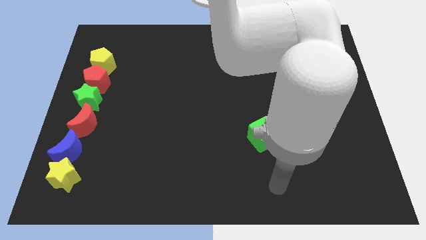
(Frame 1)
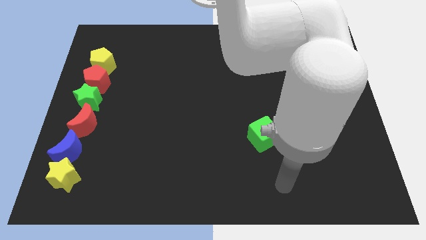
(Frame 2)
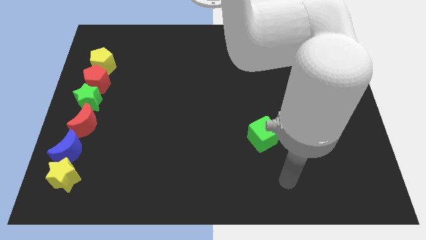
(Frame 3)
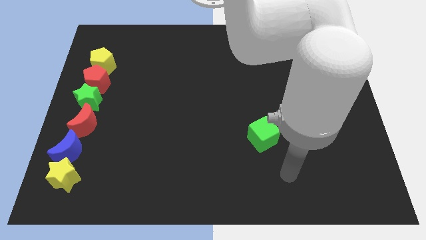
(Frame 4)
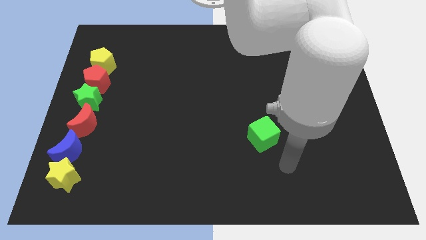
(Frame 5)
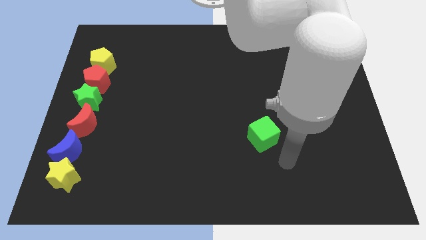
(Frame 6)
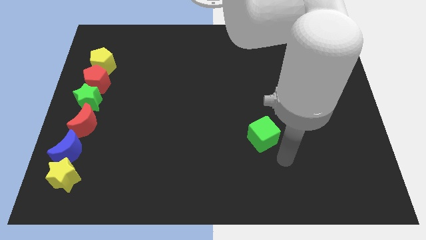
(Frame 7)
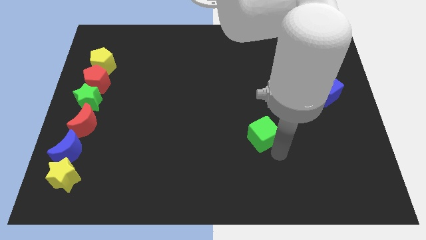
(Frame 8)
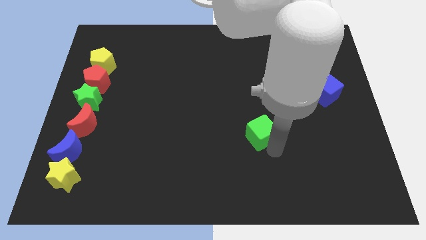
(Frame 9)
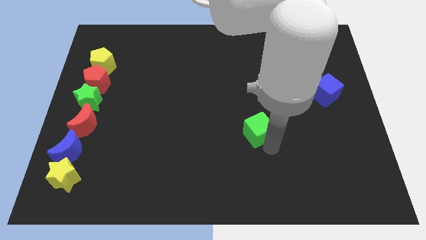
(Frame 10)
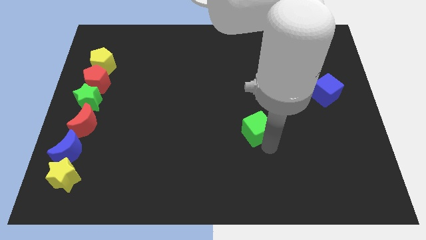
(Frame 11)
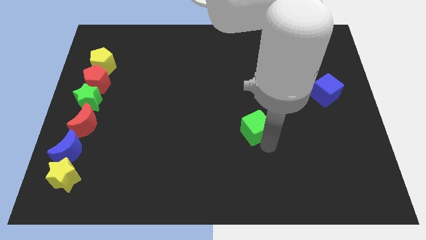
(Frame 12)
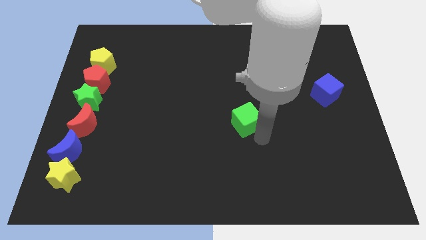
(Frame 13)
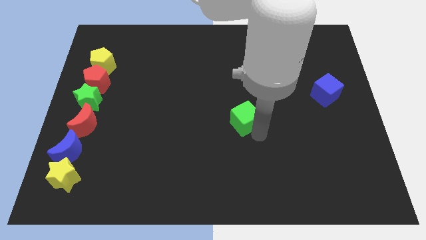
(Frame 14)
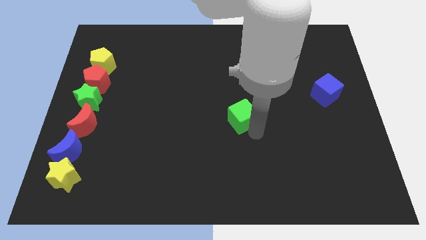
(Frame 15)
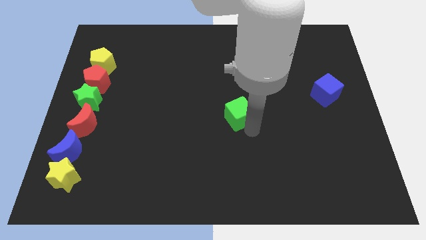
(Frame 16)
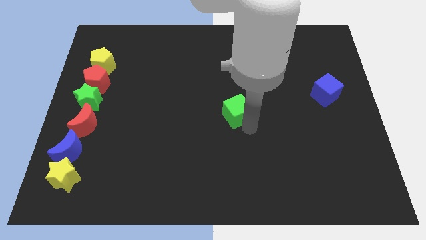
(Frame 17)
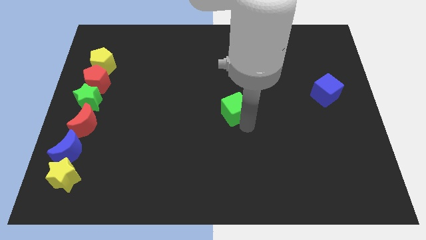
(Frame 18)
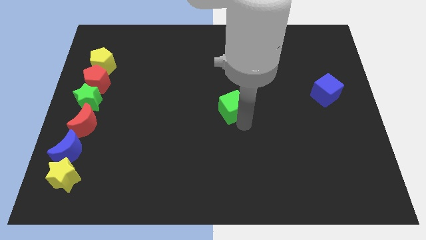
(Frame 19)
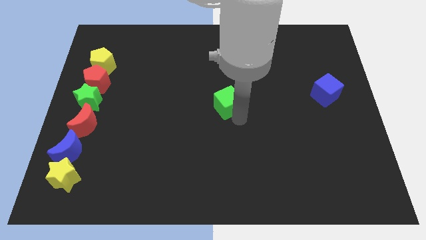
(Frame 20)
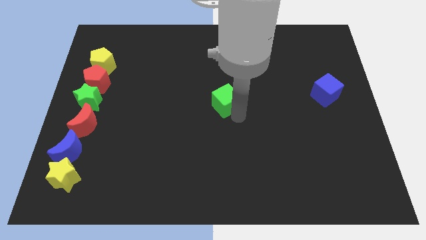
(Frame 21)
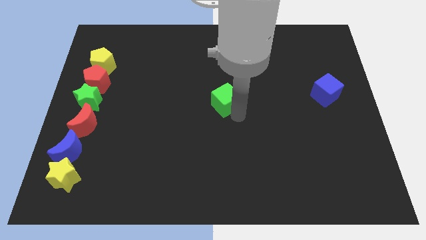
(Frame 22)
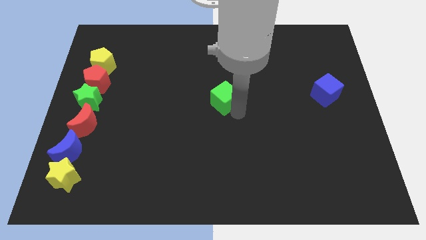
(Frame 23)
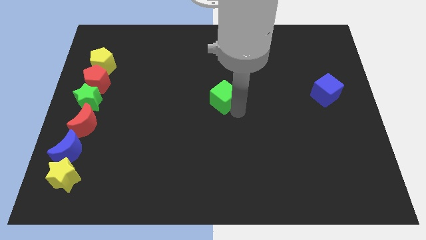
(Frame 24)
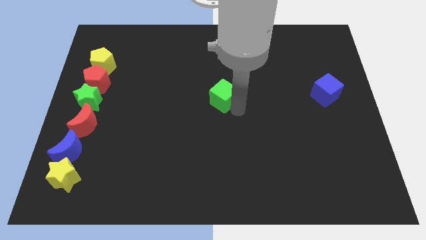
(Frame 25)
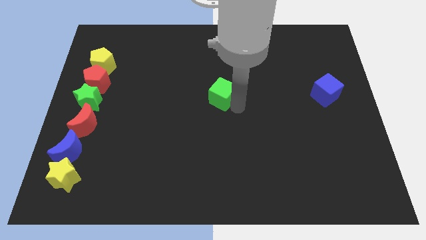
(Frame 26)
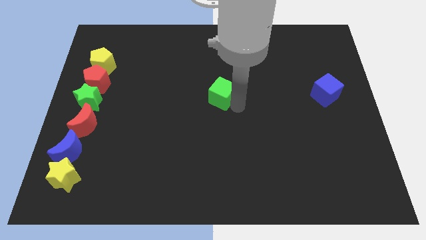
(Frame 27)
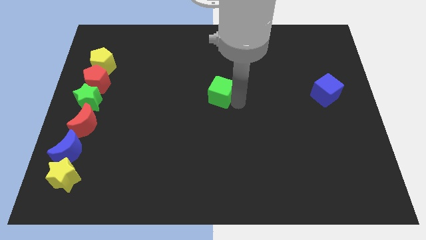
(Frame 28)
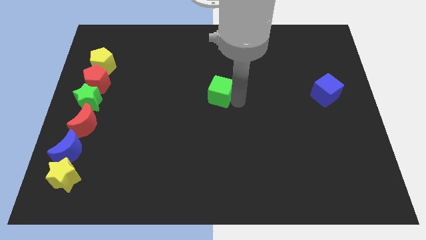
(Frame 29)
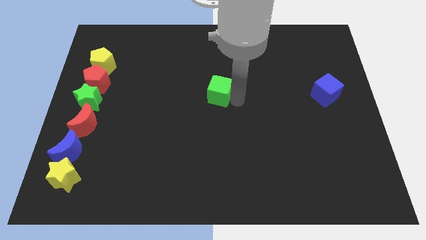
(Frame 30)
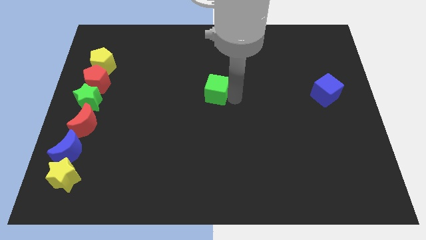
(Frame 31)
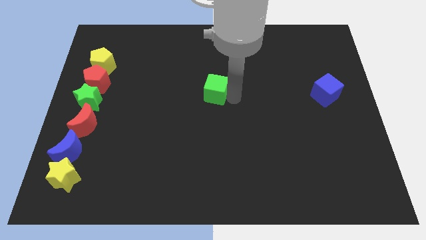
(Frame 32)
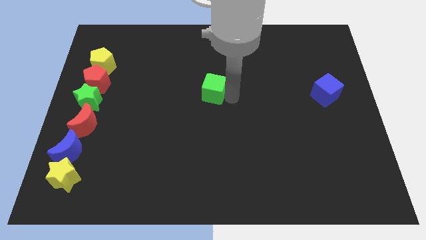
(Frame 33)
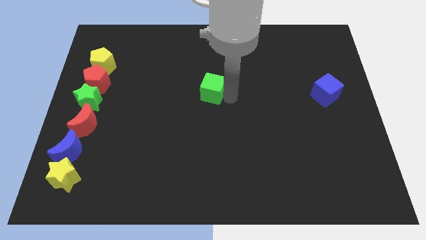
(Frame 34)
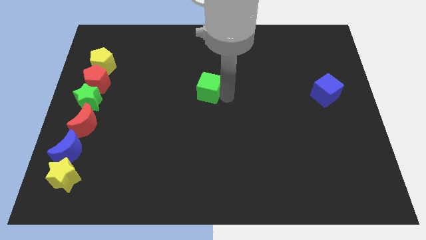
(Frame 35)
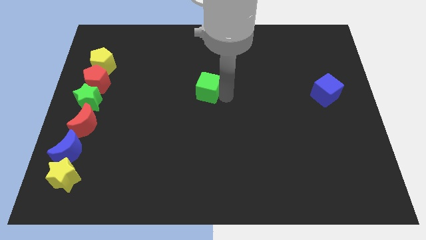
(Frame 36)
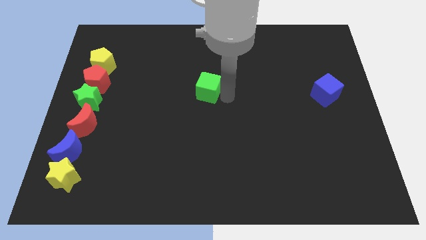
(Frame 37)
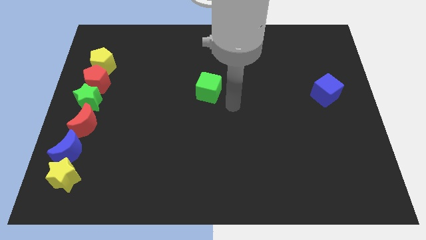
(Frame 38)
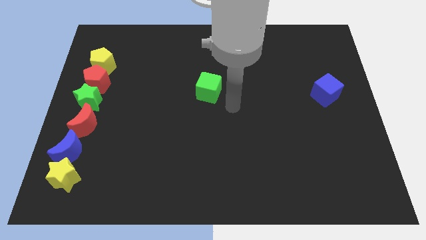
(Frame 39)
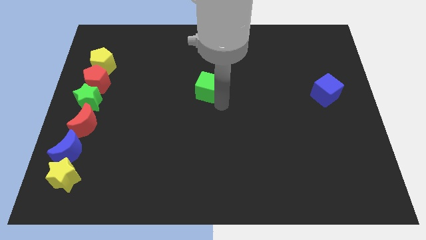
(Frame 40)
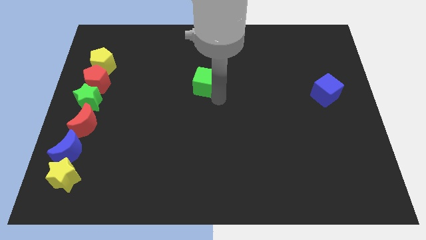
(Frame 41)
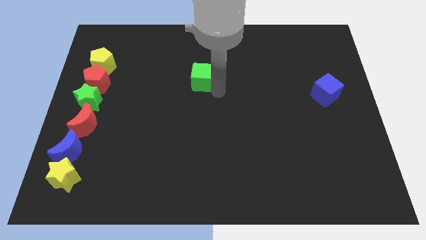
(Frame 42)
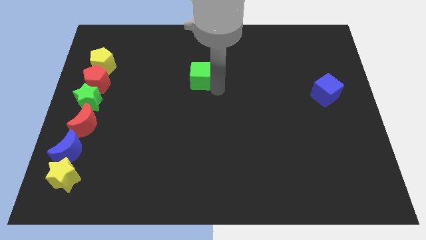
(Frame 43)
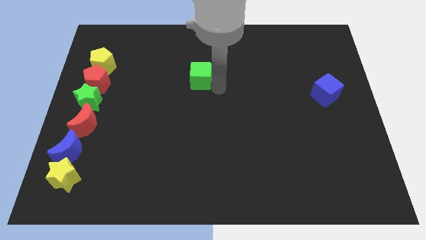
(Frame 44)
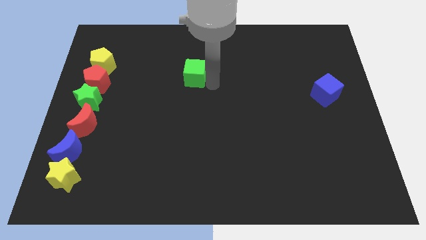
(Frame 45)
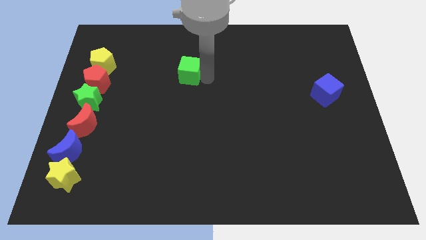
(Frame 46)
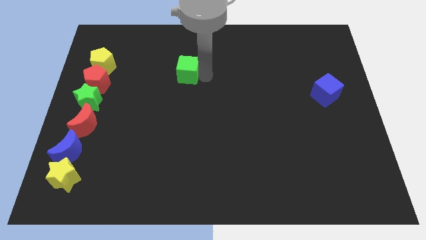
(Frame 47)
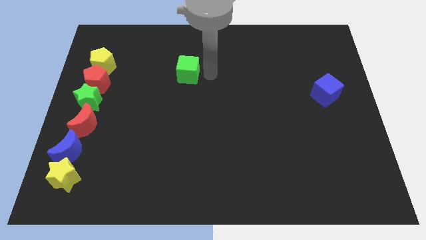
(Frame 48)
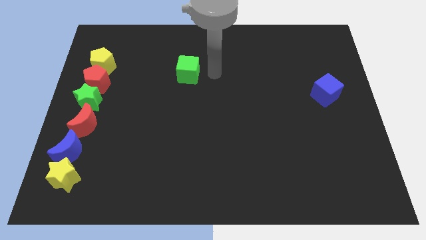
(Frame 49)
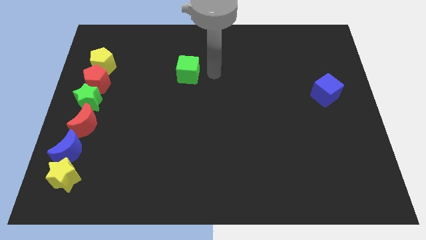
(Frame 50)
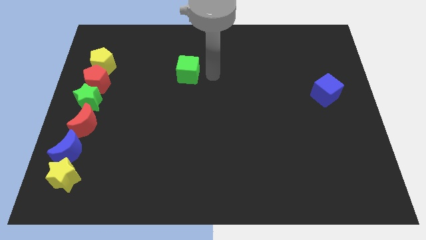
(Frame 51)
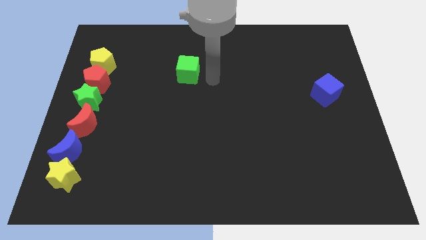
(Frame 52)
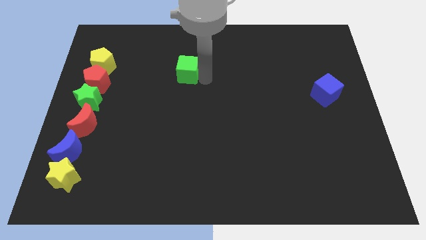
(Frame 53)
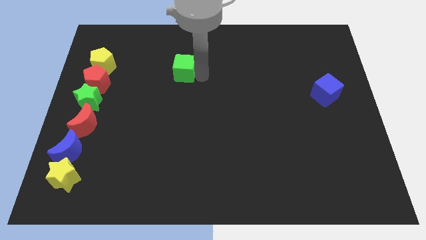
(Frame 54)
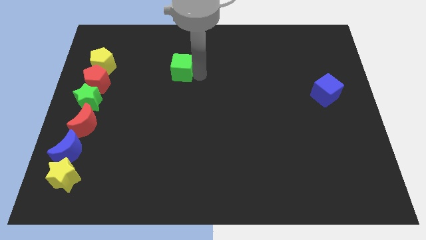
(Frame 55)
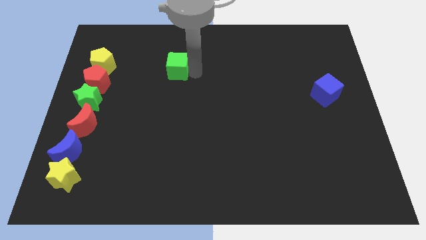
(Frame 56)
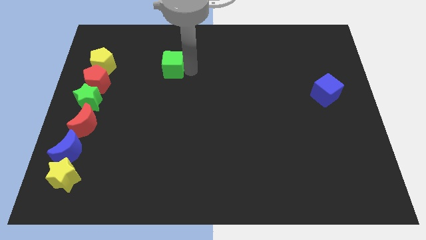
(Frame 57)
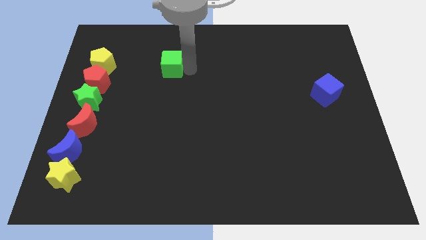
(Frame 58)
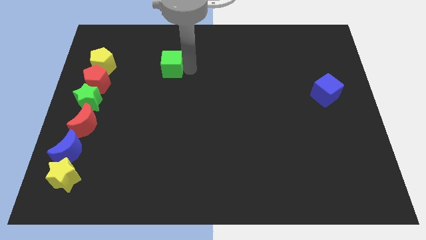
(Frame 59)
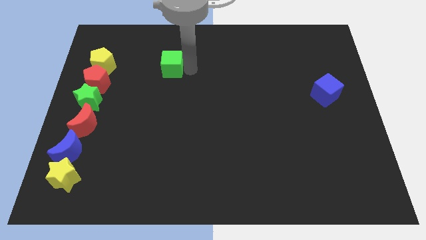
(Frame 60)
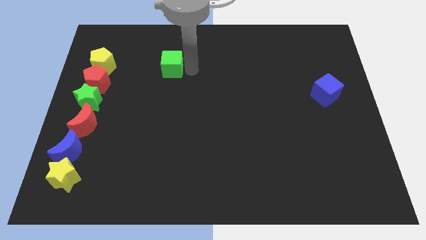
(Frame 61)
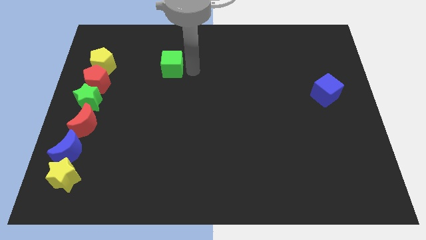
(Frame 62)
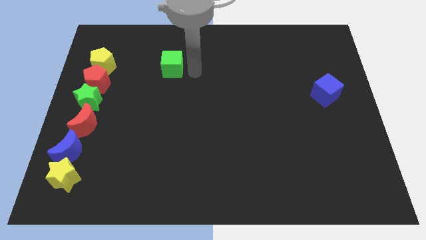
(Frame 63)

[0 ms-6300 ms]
push green cube to the right of the yellow pentagon

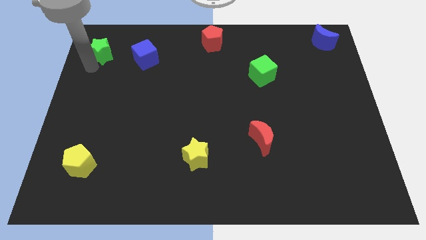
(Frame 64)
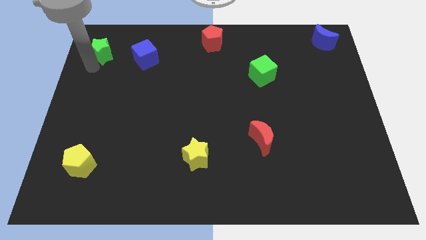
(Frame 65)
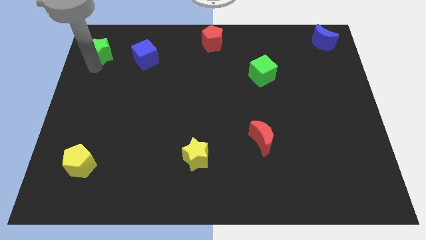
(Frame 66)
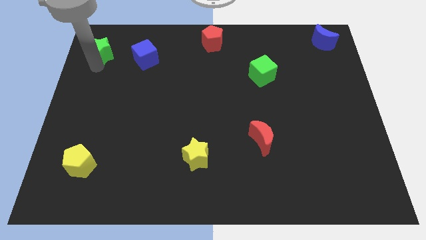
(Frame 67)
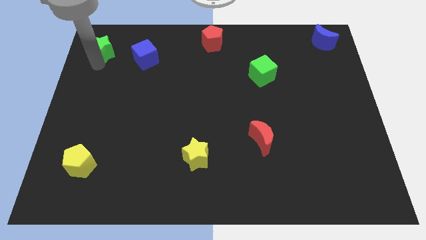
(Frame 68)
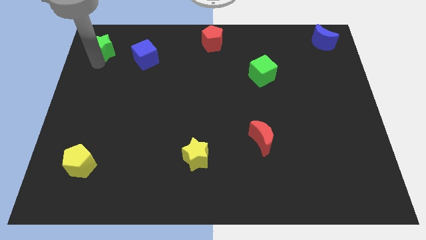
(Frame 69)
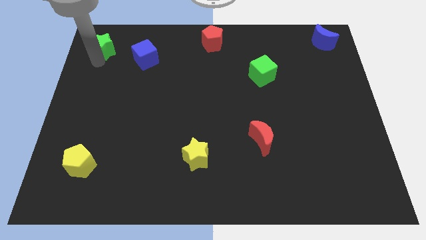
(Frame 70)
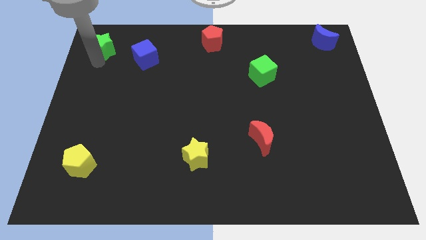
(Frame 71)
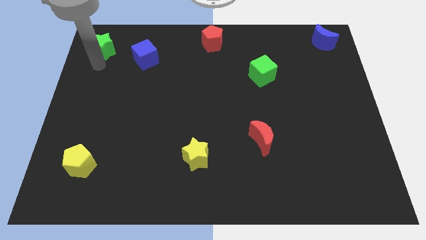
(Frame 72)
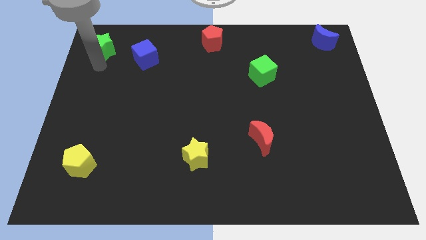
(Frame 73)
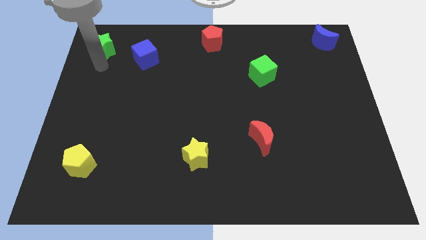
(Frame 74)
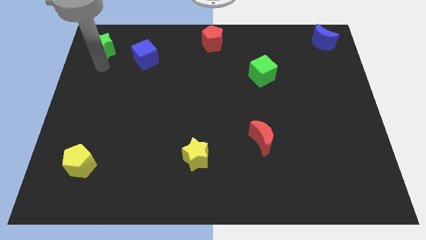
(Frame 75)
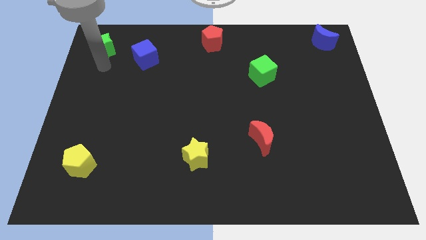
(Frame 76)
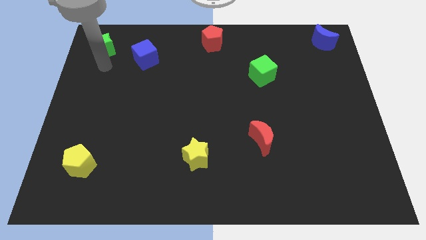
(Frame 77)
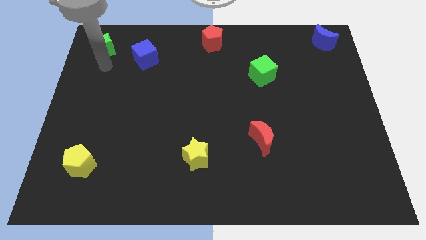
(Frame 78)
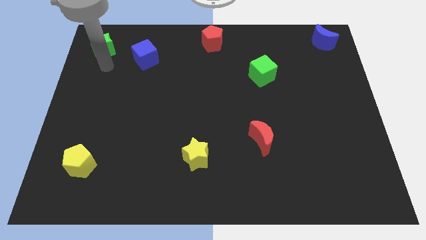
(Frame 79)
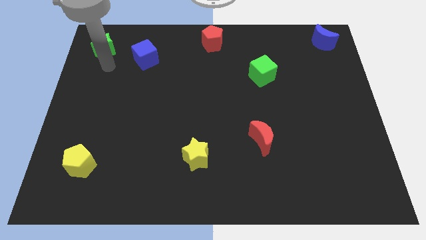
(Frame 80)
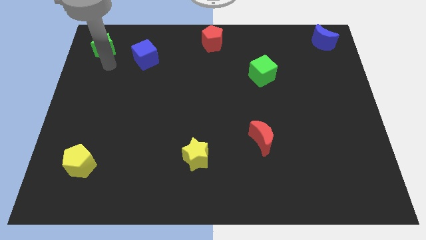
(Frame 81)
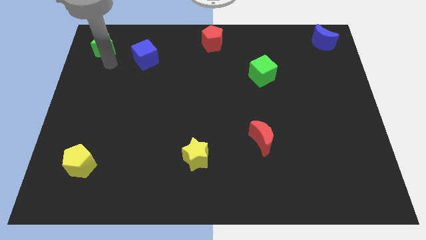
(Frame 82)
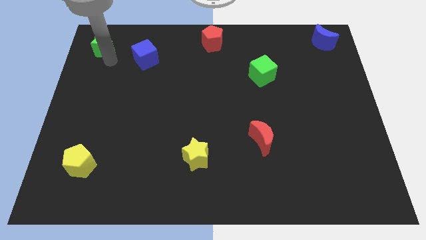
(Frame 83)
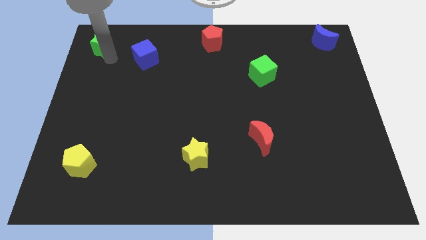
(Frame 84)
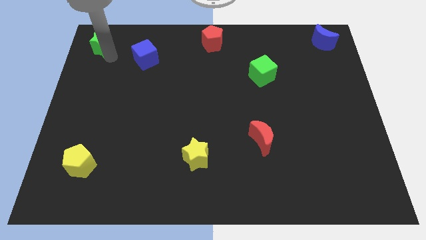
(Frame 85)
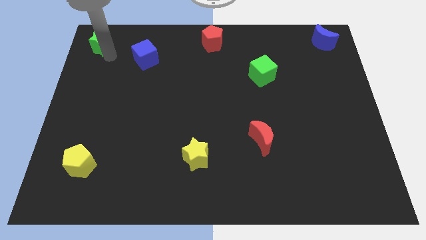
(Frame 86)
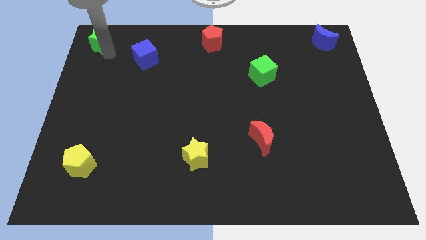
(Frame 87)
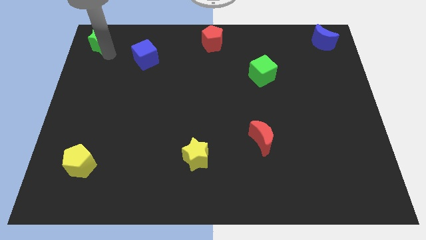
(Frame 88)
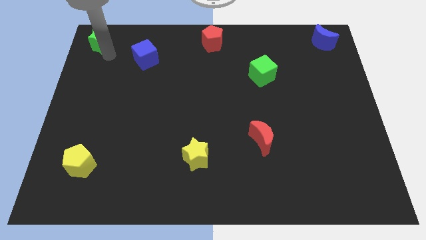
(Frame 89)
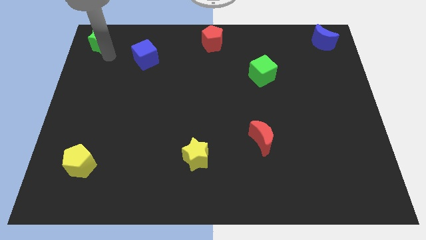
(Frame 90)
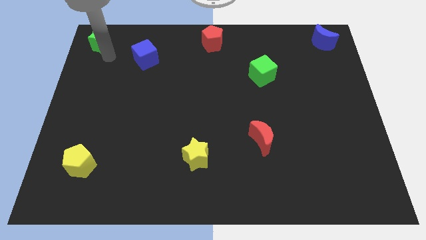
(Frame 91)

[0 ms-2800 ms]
push the green star to the top left
